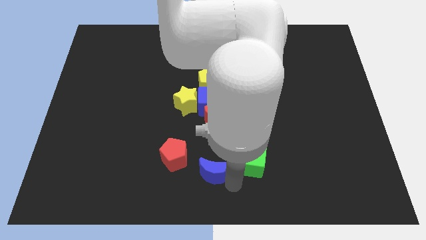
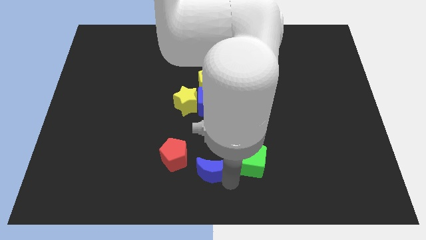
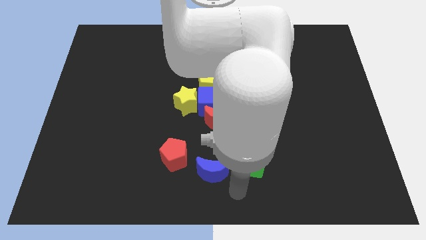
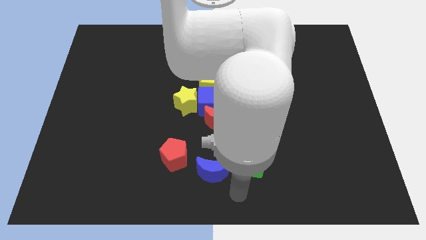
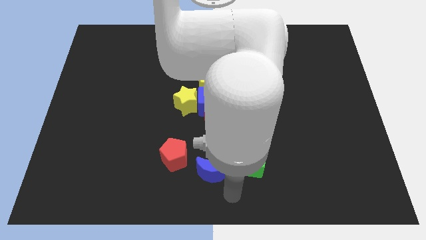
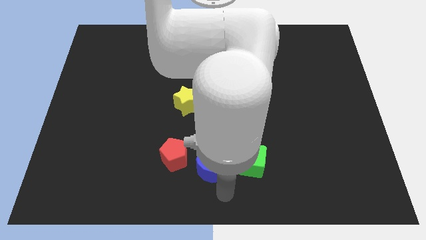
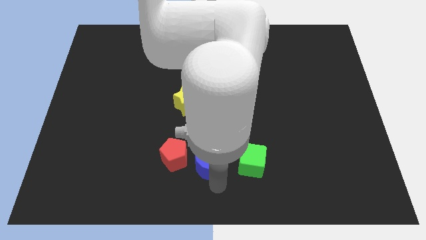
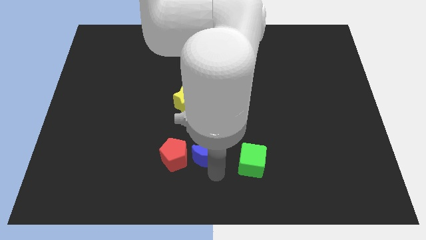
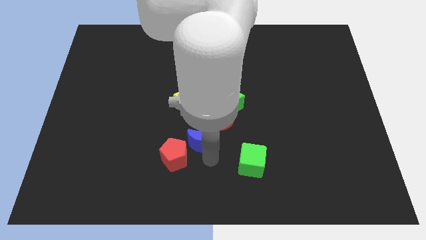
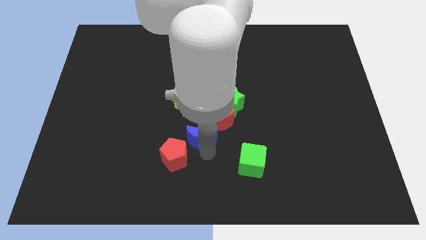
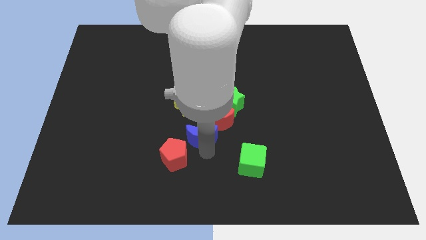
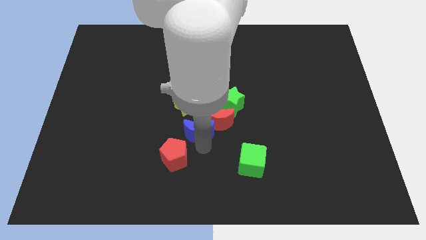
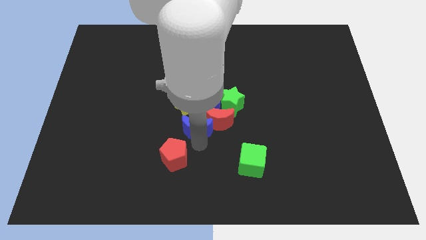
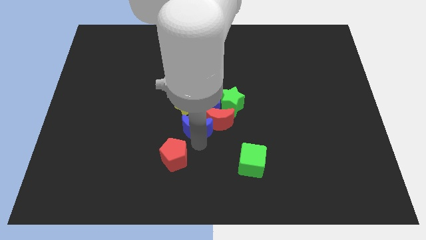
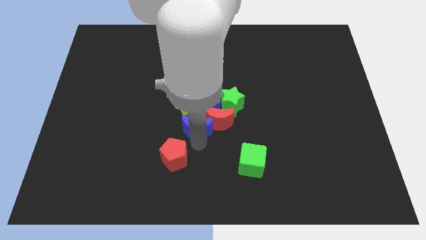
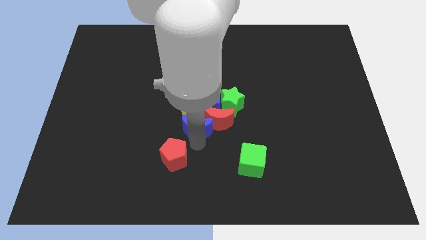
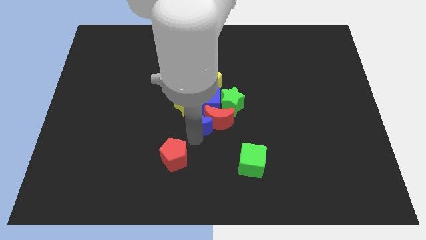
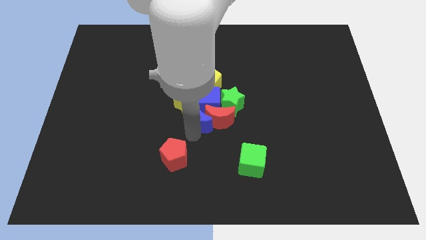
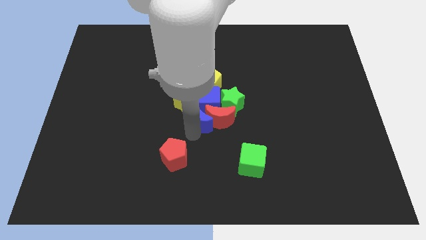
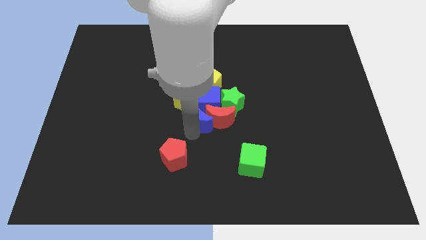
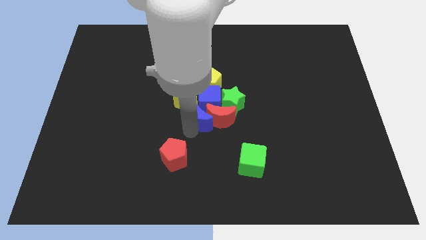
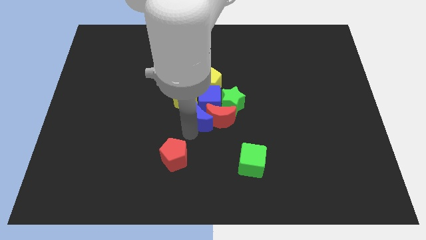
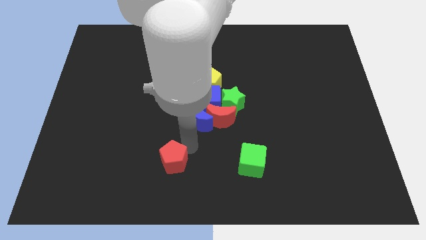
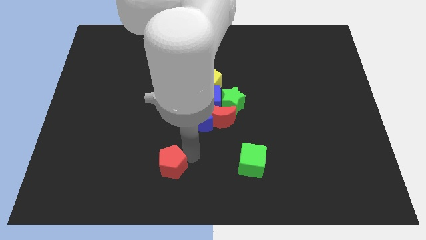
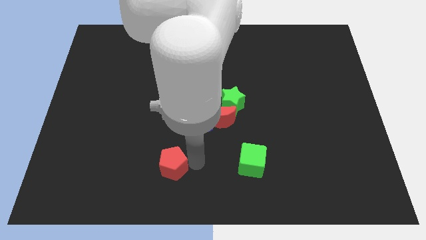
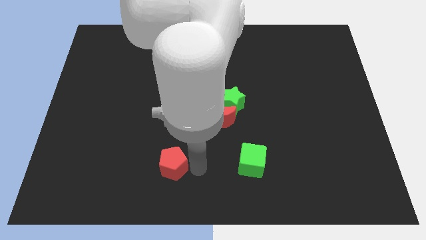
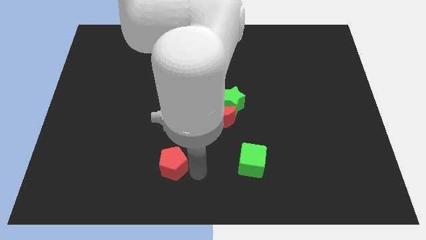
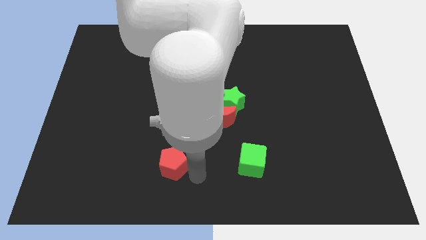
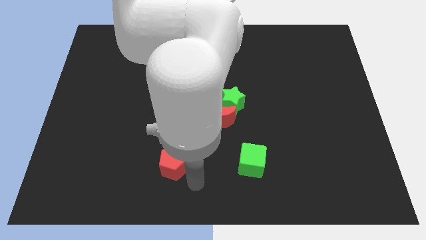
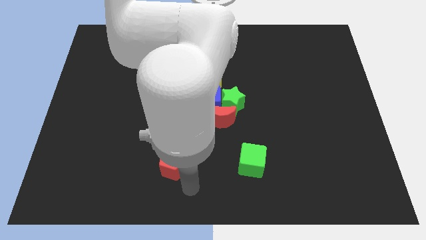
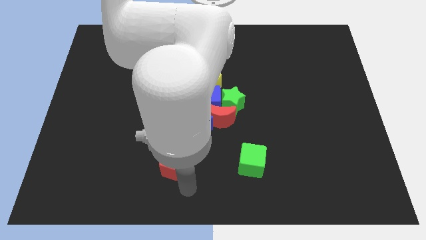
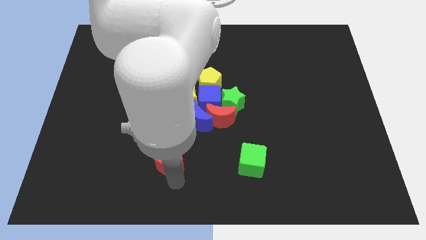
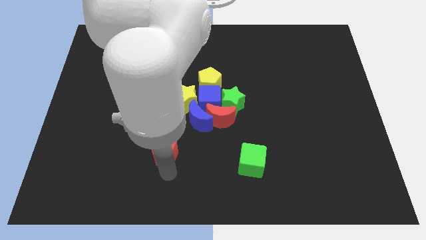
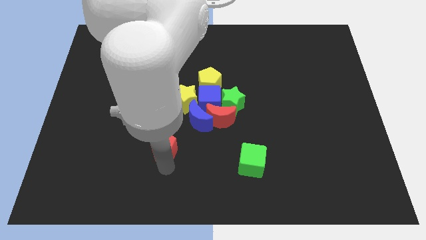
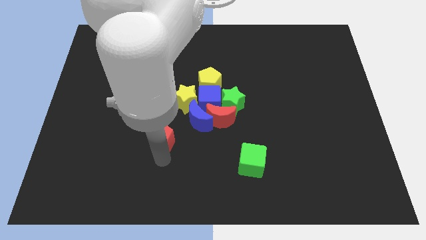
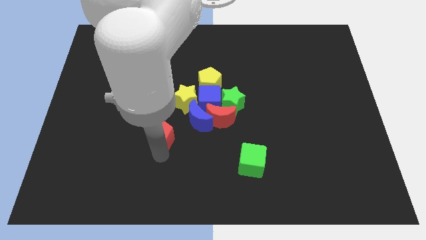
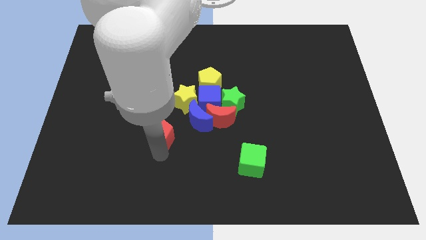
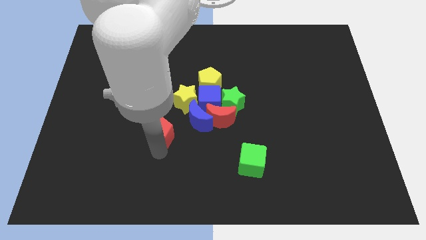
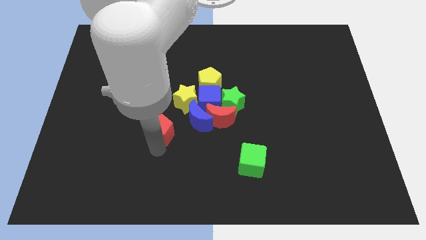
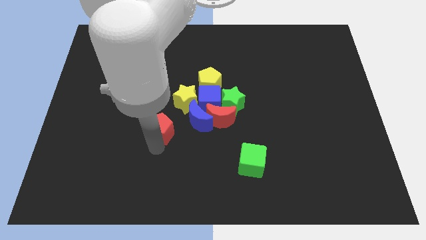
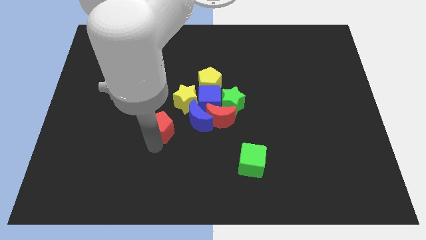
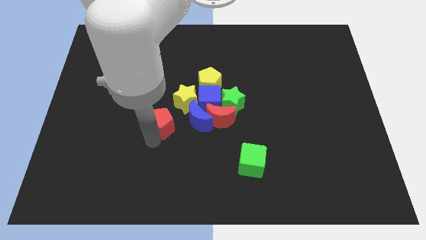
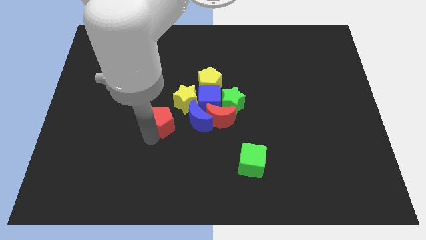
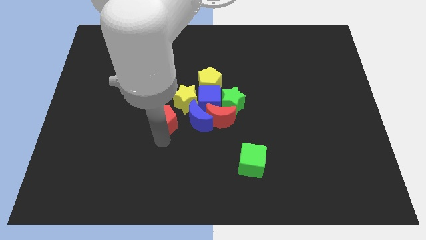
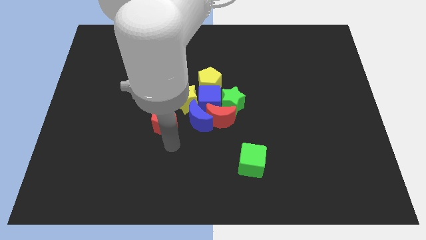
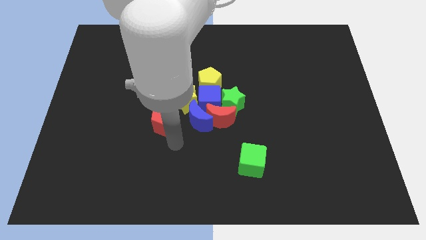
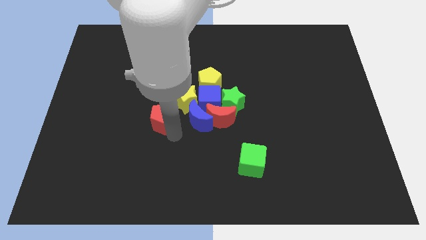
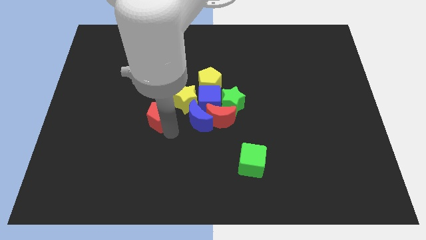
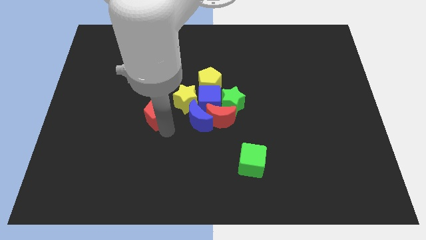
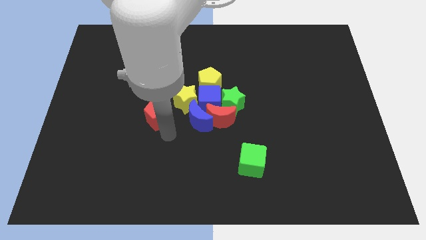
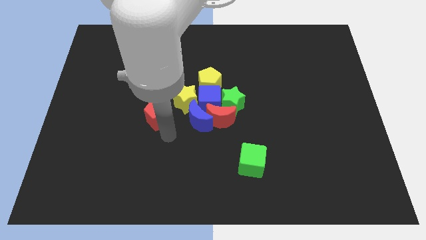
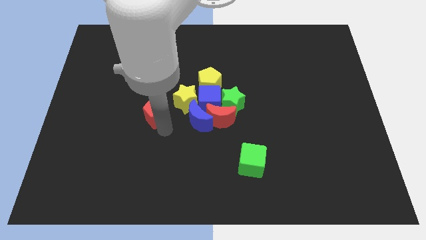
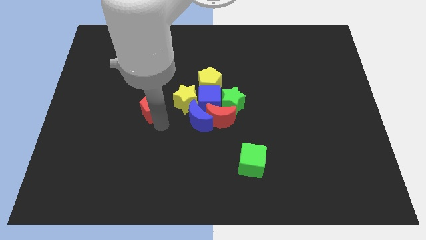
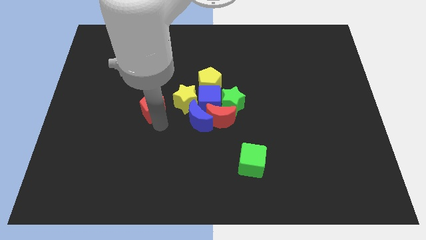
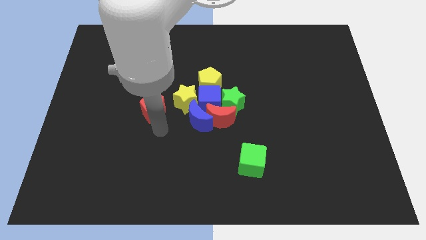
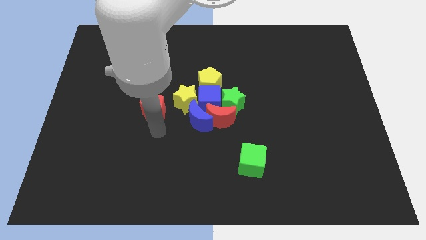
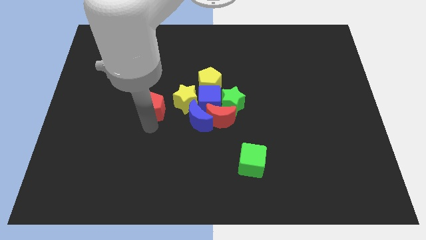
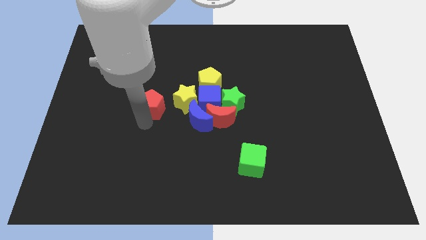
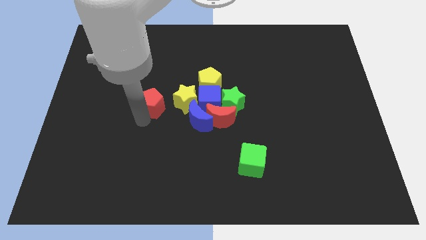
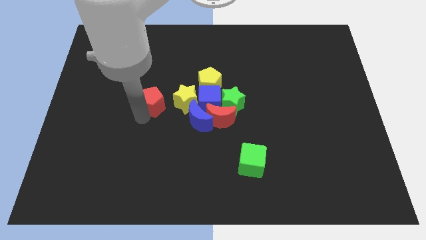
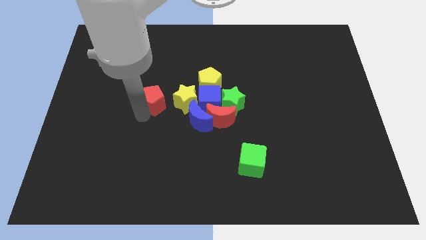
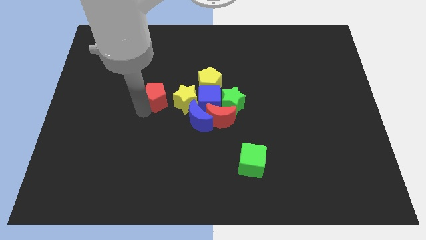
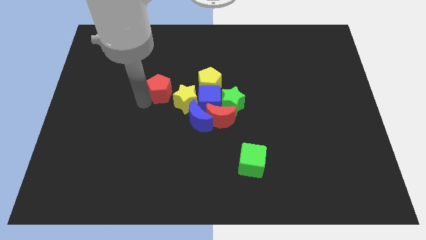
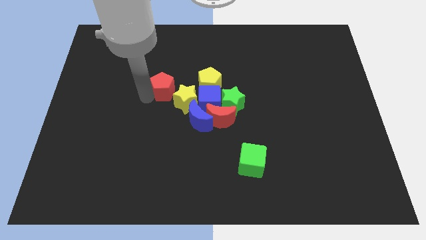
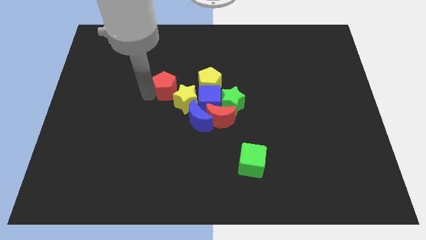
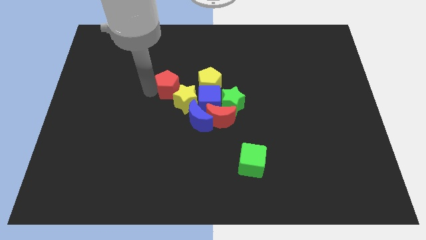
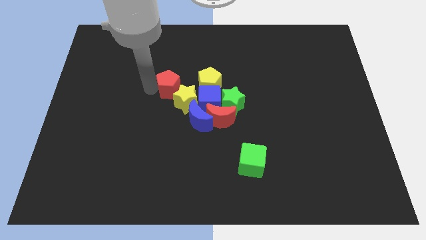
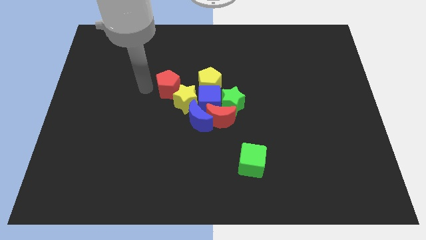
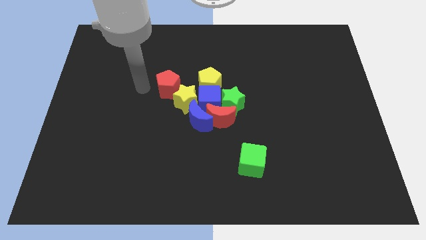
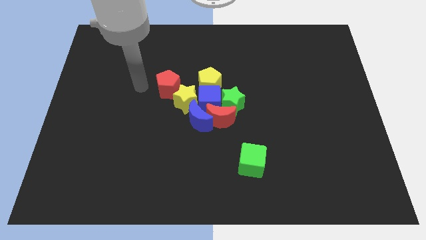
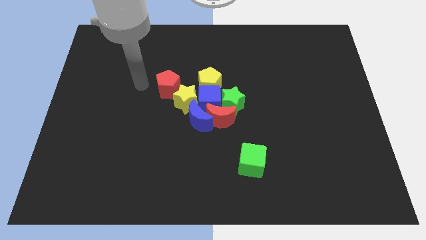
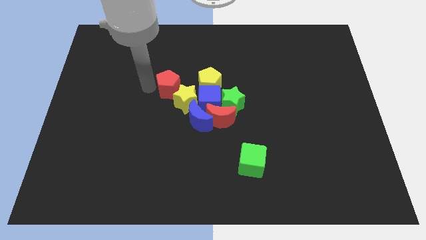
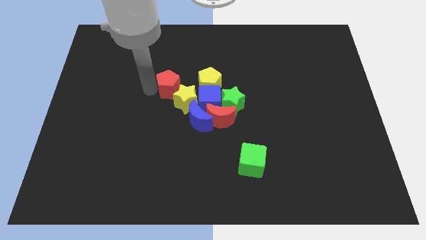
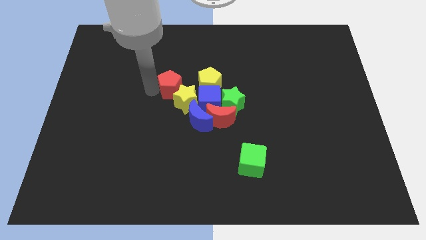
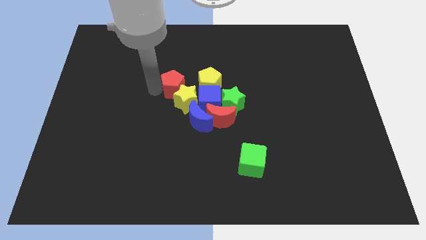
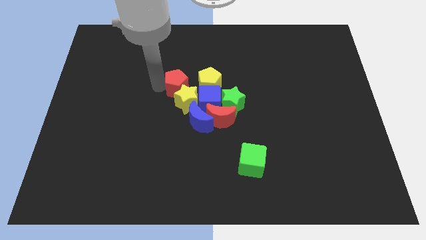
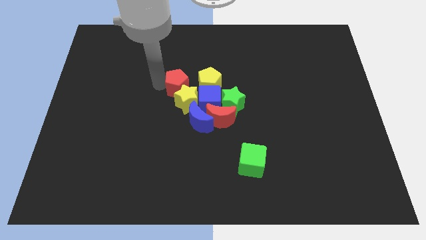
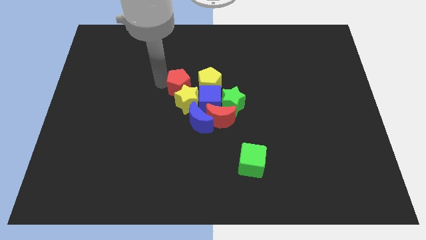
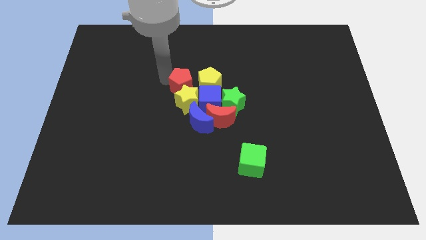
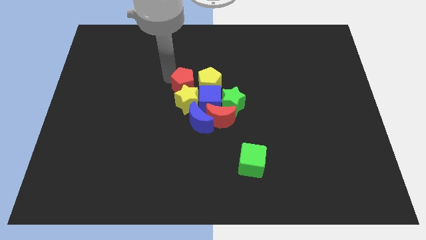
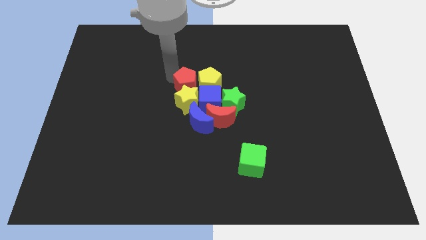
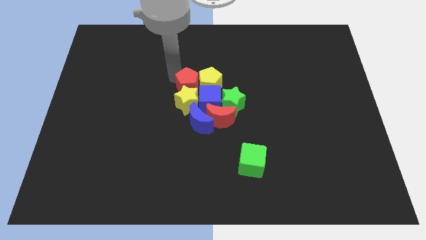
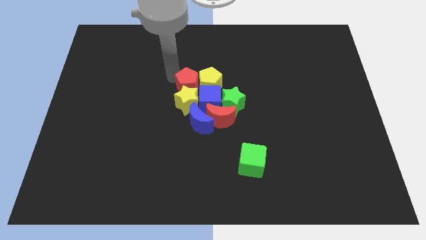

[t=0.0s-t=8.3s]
move the blue moon and the red pentagon into the group

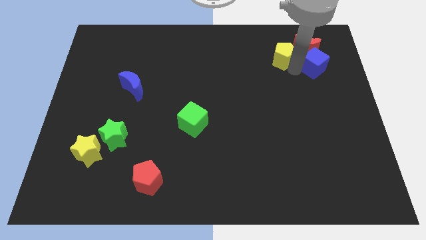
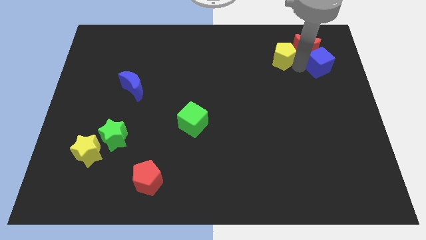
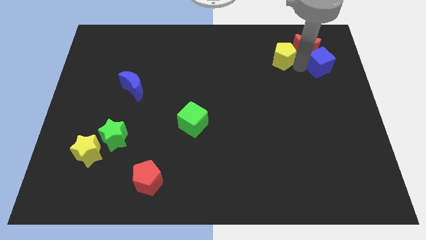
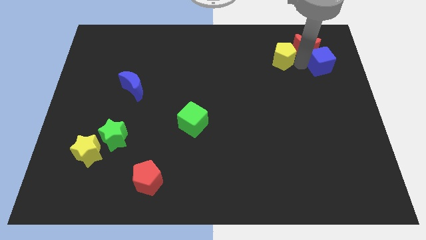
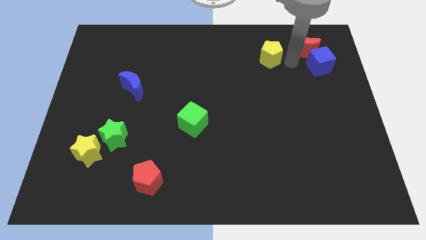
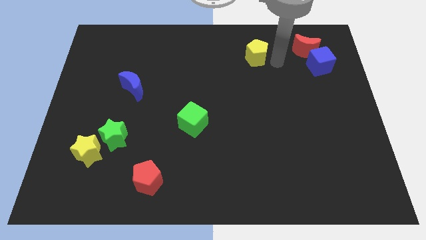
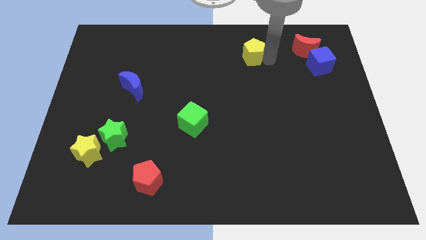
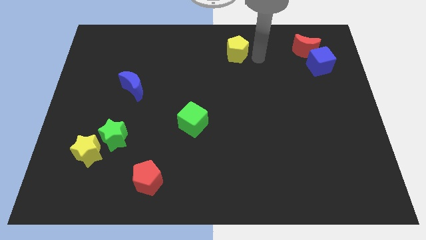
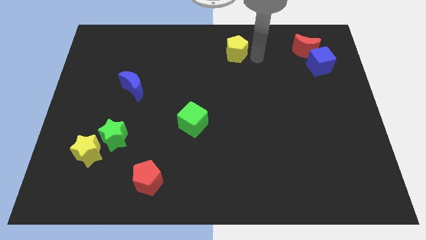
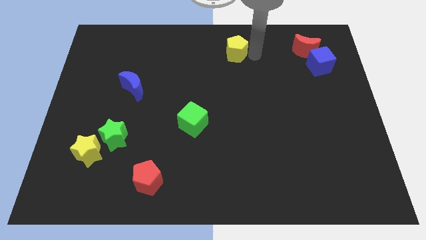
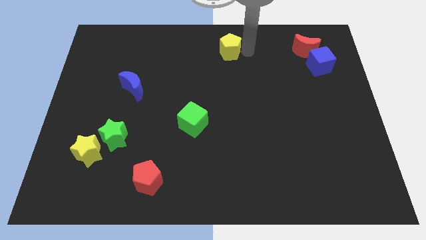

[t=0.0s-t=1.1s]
separate yellow pentagon from red crescent
